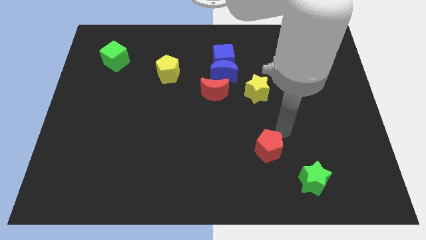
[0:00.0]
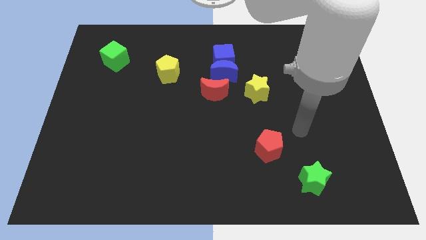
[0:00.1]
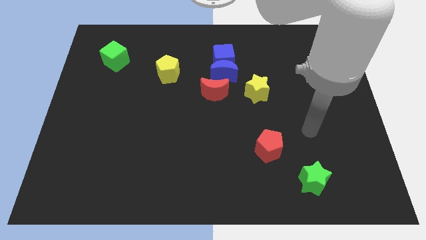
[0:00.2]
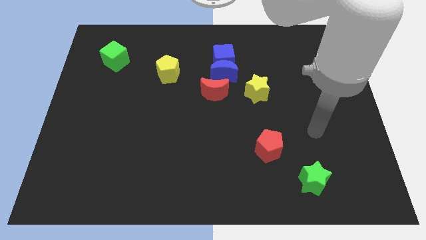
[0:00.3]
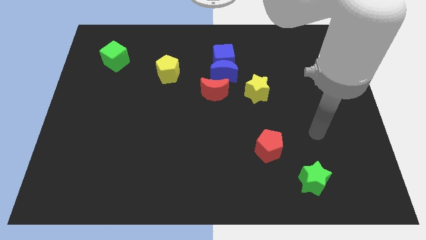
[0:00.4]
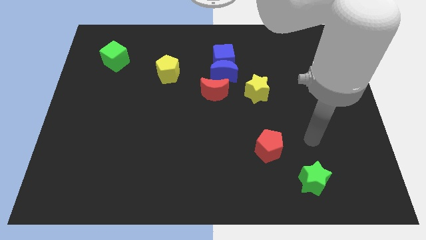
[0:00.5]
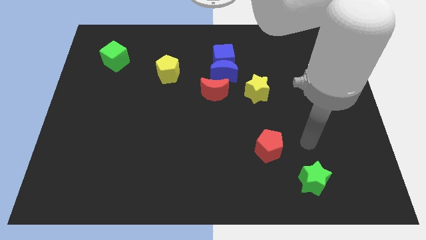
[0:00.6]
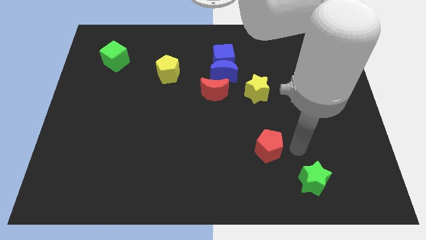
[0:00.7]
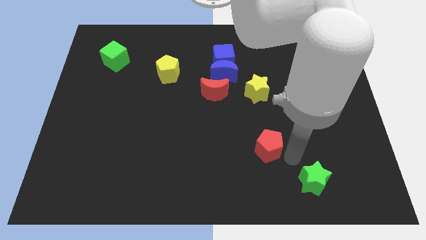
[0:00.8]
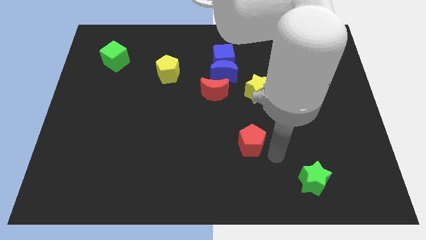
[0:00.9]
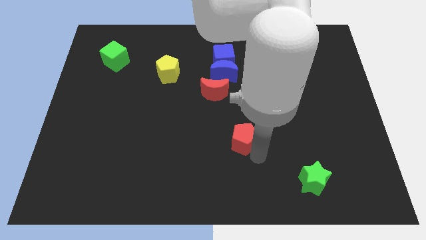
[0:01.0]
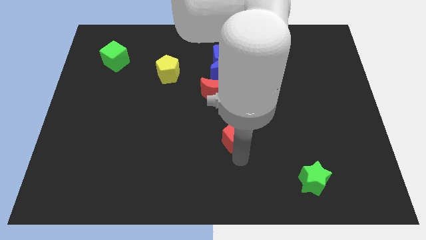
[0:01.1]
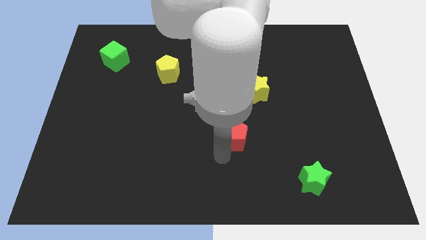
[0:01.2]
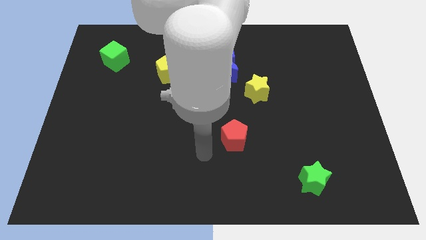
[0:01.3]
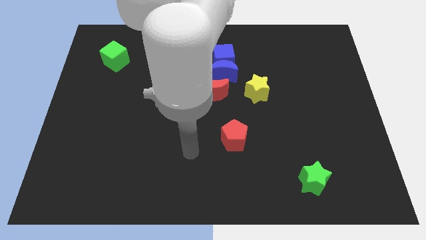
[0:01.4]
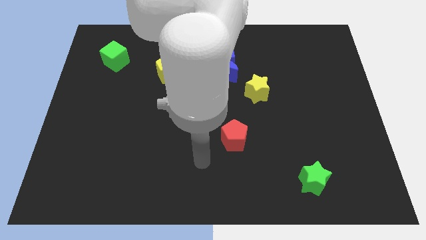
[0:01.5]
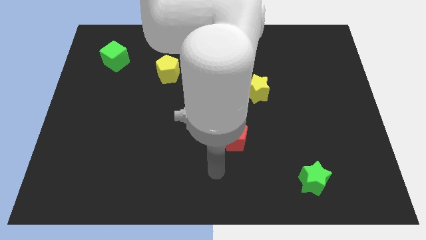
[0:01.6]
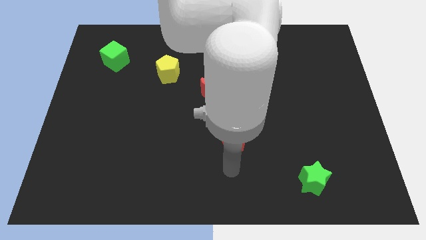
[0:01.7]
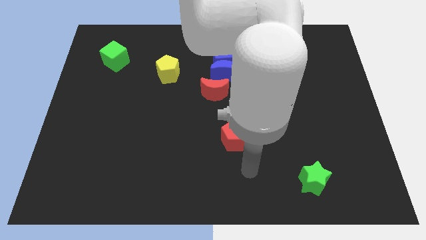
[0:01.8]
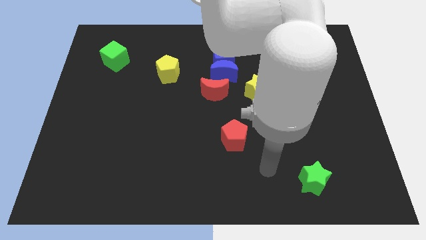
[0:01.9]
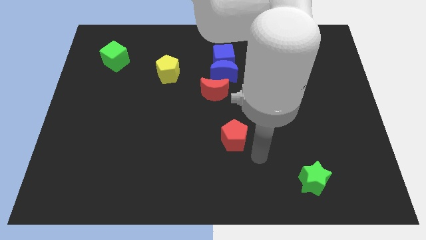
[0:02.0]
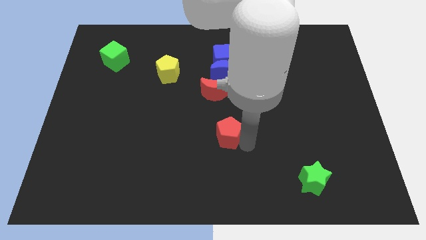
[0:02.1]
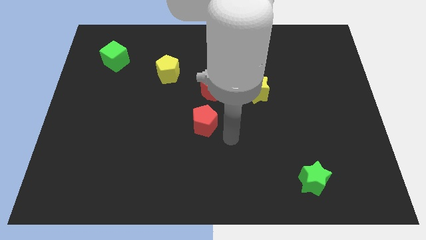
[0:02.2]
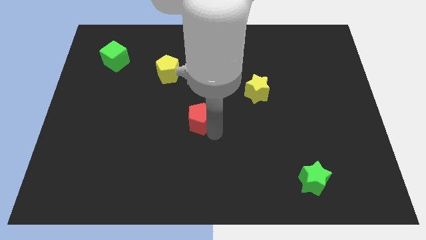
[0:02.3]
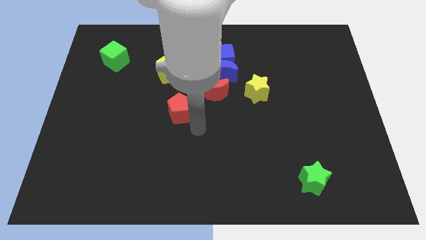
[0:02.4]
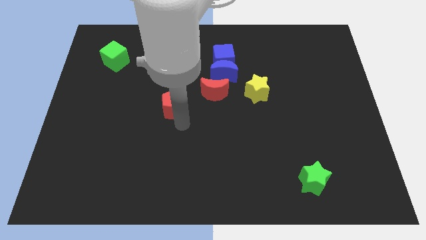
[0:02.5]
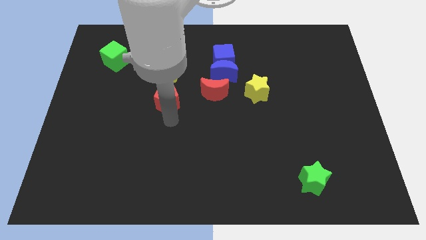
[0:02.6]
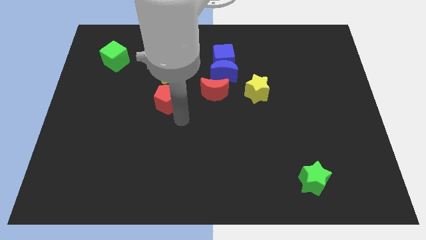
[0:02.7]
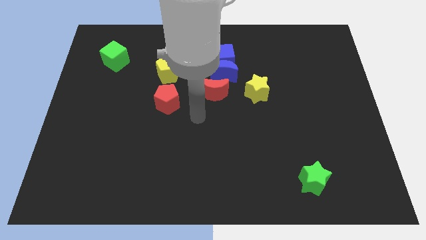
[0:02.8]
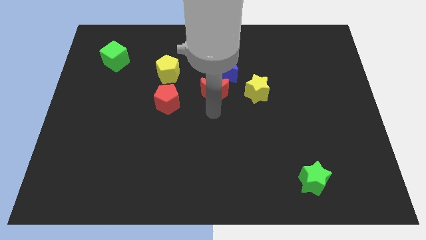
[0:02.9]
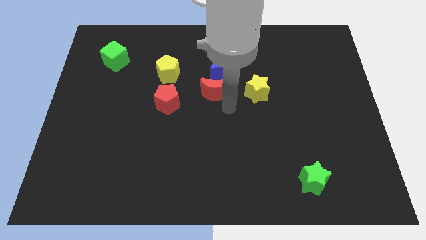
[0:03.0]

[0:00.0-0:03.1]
move the red pentagon vertically below the yellow pentagon

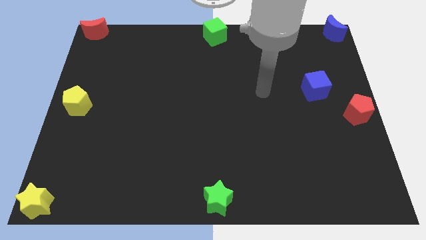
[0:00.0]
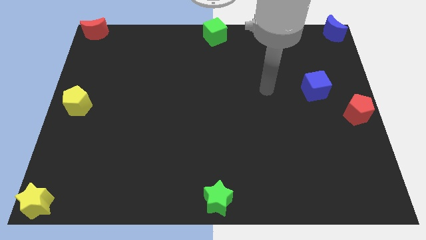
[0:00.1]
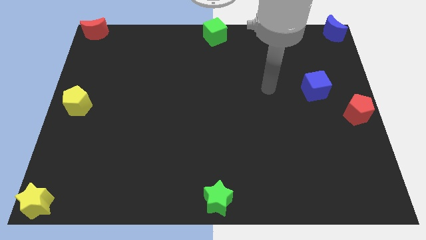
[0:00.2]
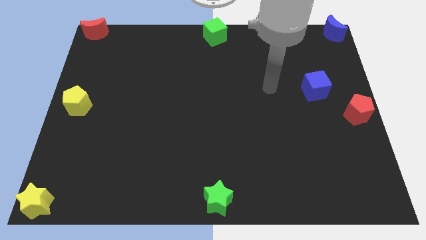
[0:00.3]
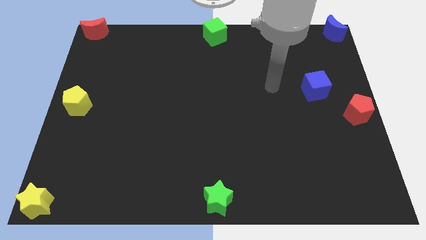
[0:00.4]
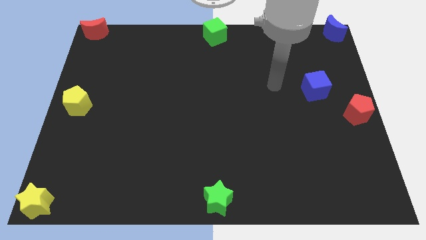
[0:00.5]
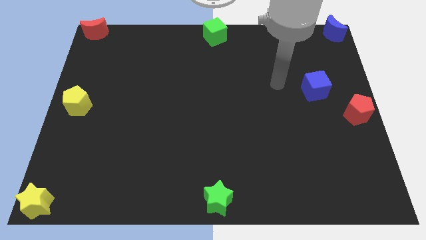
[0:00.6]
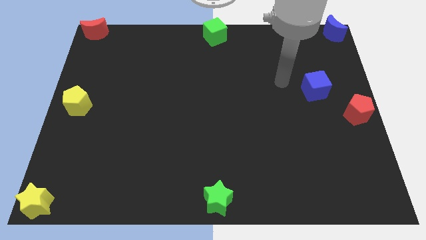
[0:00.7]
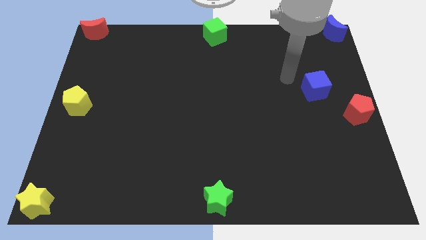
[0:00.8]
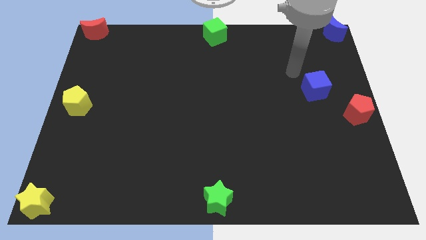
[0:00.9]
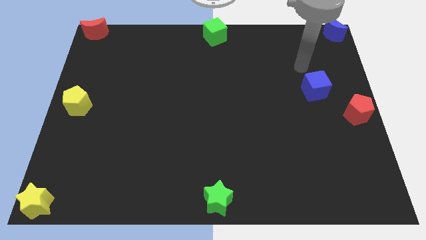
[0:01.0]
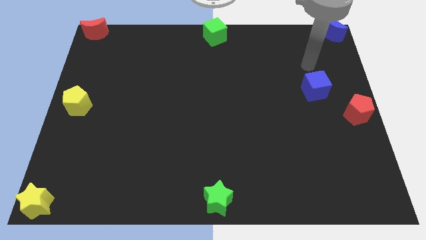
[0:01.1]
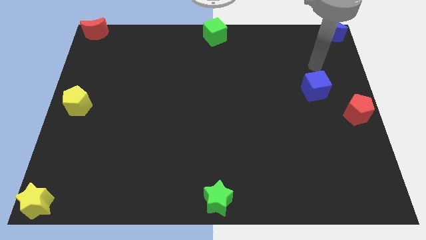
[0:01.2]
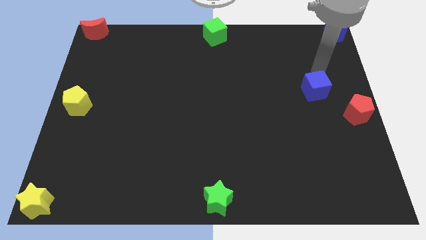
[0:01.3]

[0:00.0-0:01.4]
point your arm at the top of blue cube

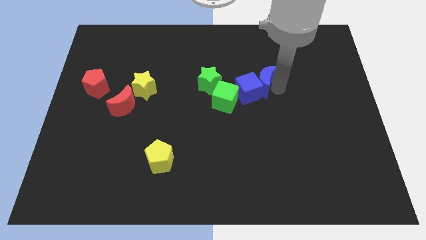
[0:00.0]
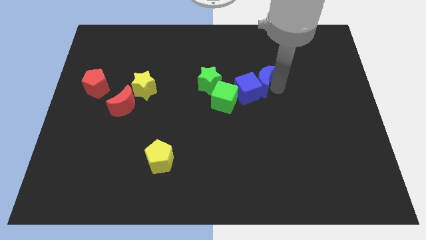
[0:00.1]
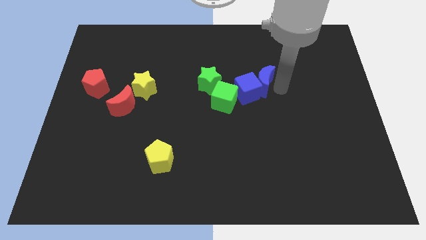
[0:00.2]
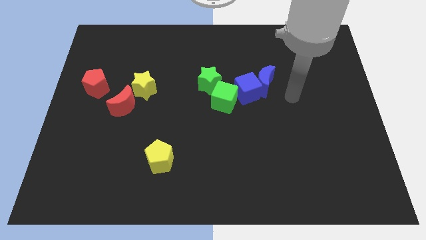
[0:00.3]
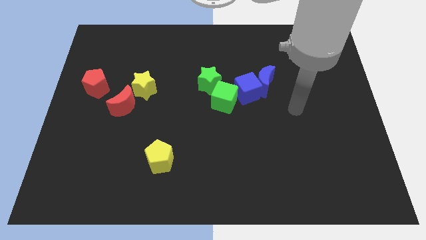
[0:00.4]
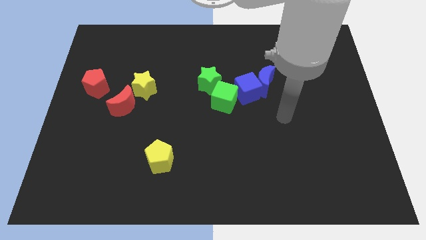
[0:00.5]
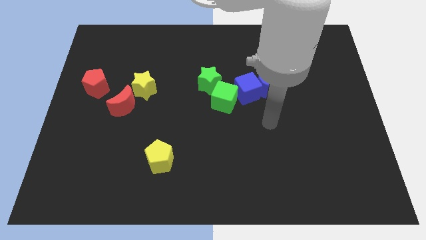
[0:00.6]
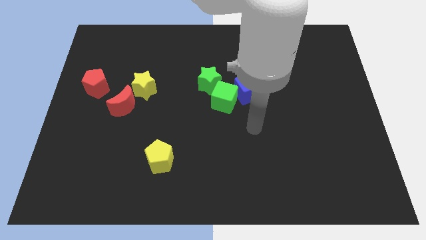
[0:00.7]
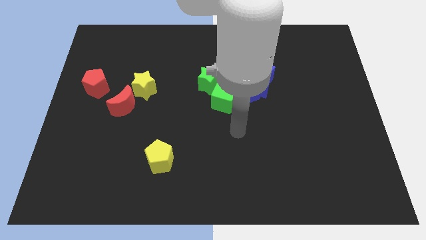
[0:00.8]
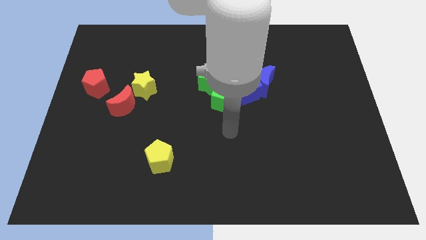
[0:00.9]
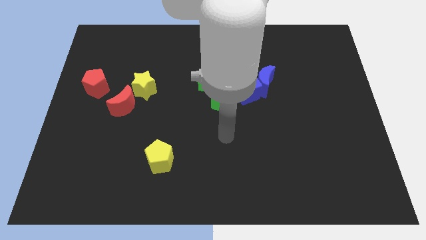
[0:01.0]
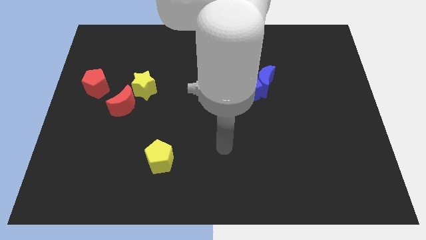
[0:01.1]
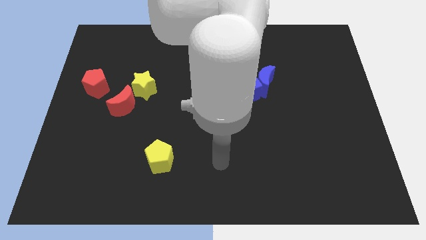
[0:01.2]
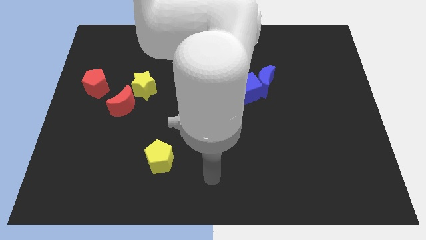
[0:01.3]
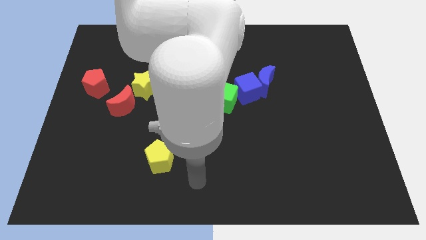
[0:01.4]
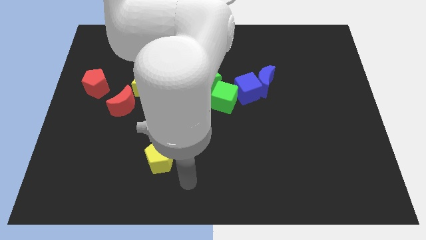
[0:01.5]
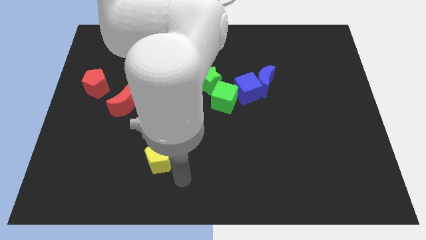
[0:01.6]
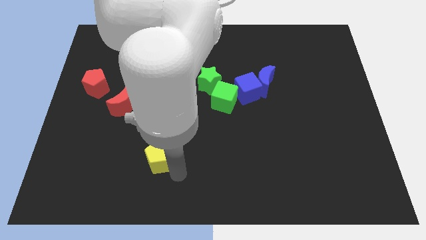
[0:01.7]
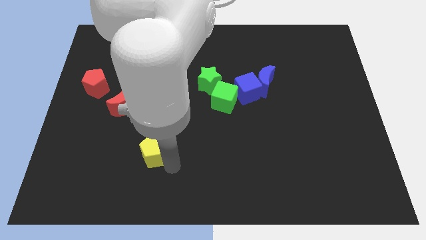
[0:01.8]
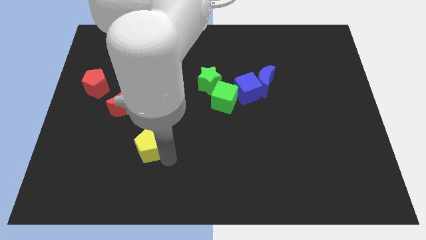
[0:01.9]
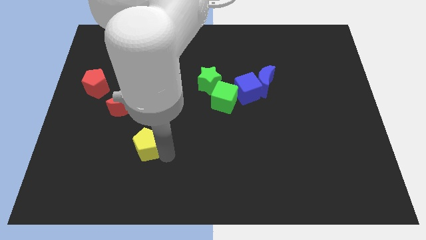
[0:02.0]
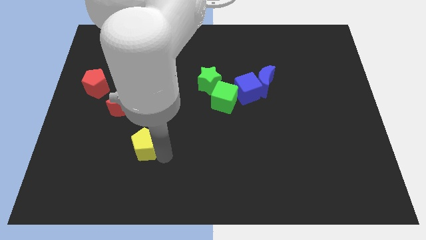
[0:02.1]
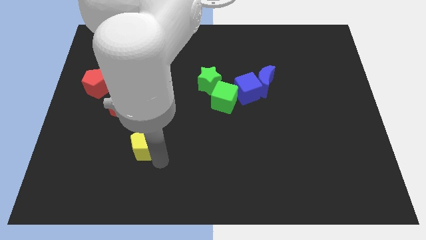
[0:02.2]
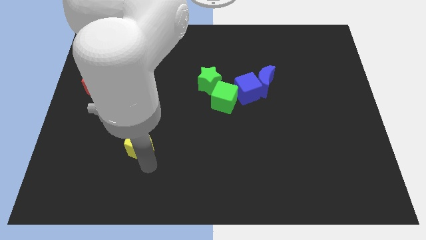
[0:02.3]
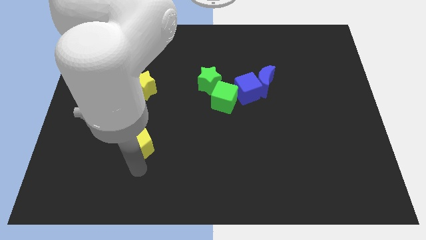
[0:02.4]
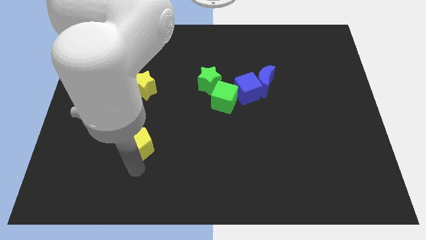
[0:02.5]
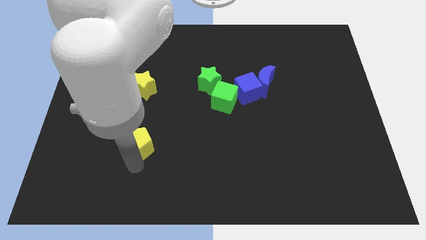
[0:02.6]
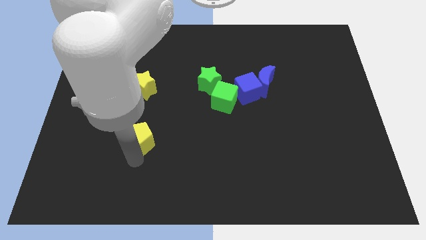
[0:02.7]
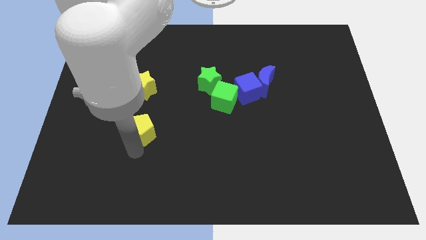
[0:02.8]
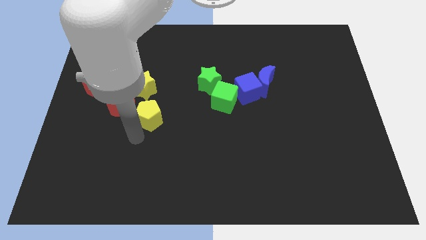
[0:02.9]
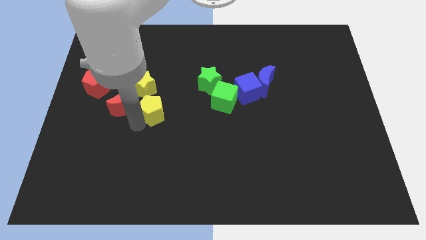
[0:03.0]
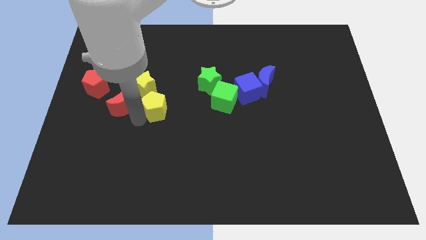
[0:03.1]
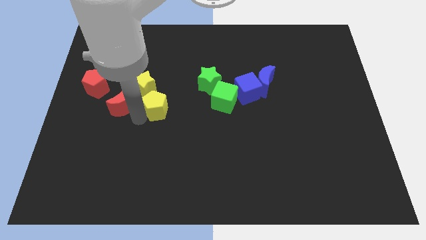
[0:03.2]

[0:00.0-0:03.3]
place yellow pentagon to the bottom of yellow star

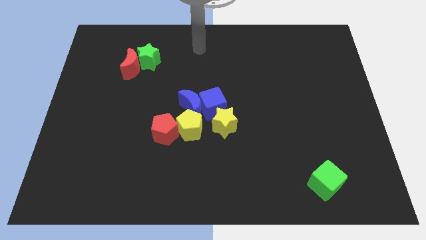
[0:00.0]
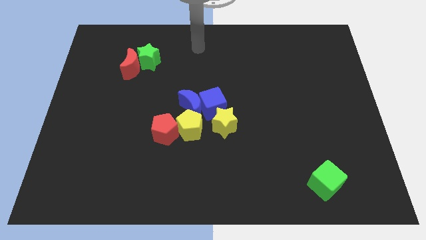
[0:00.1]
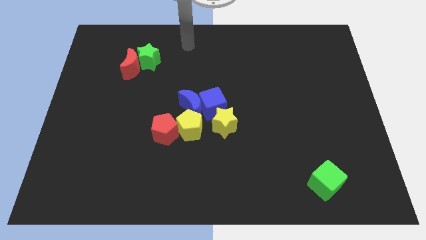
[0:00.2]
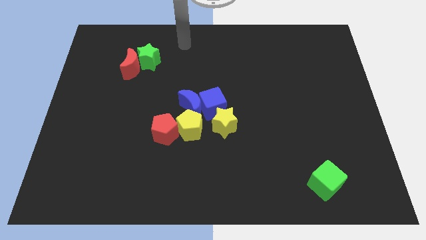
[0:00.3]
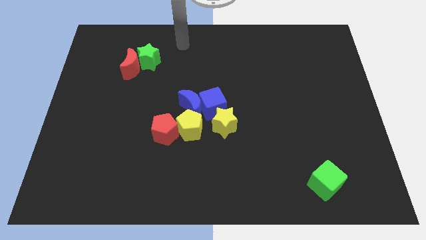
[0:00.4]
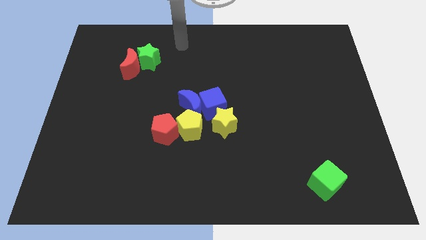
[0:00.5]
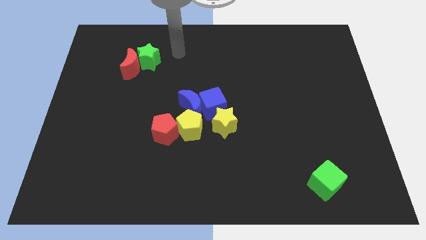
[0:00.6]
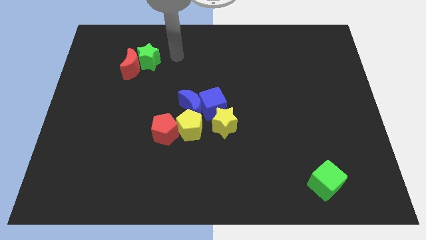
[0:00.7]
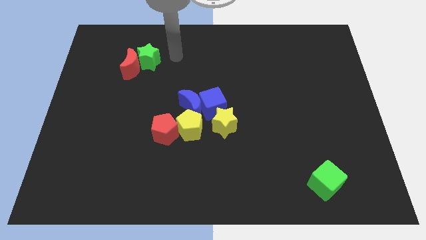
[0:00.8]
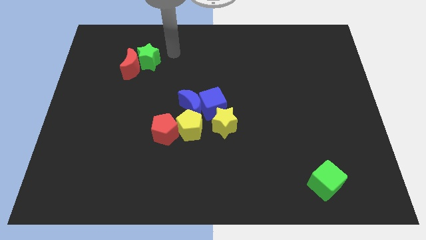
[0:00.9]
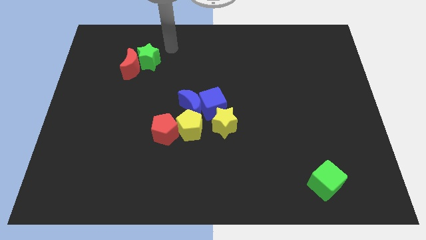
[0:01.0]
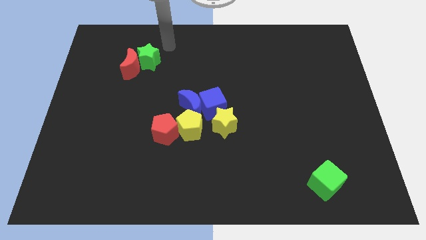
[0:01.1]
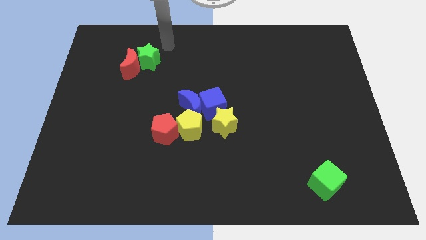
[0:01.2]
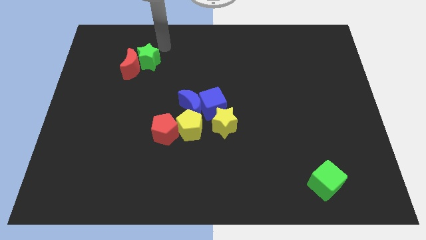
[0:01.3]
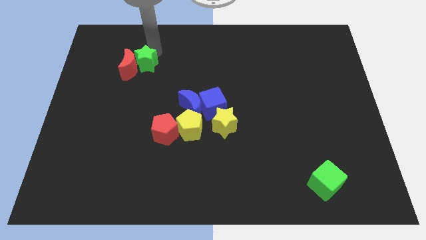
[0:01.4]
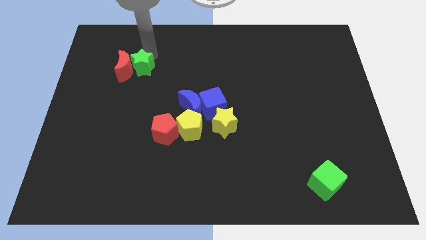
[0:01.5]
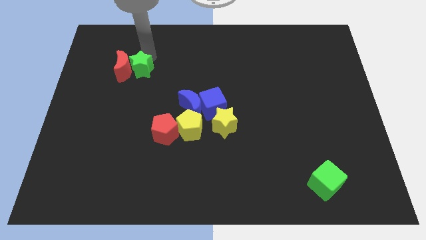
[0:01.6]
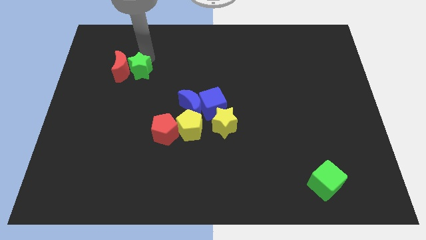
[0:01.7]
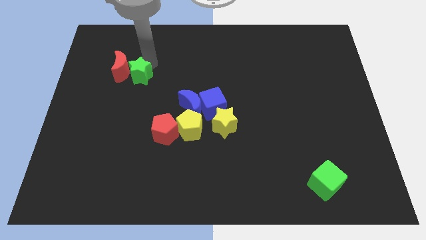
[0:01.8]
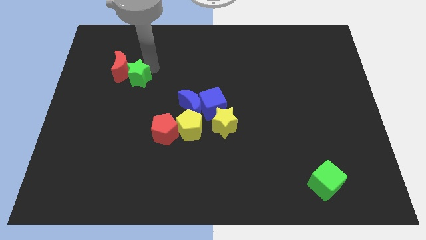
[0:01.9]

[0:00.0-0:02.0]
move green star into red crescent
